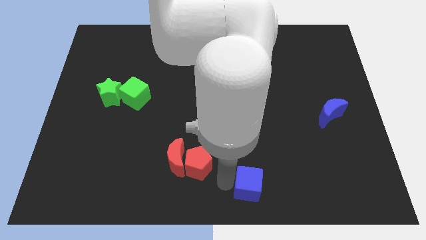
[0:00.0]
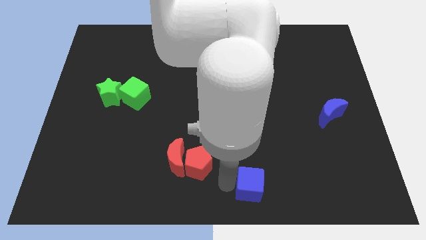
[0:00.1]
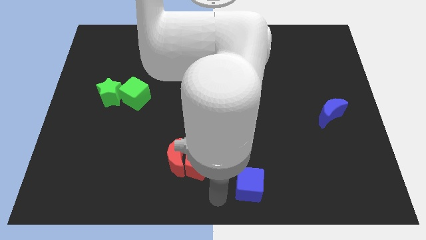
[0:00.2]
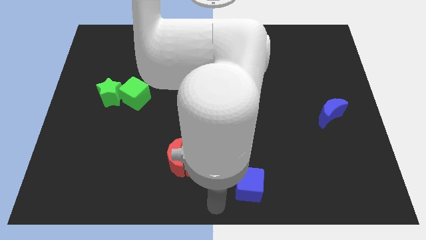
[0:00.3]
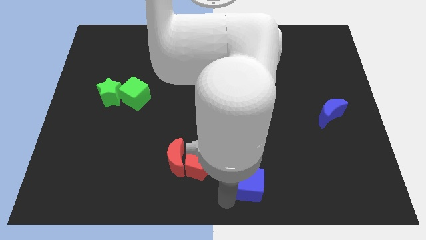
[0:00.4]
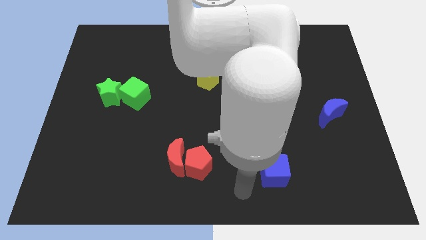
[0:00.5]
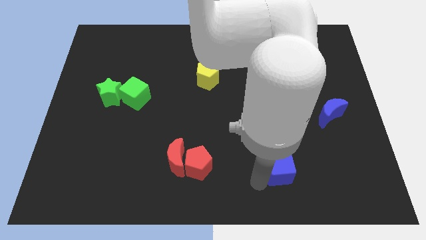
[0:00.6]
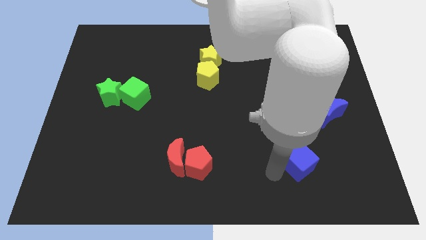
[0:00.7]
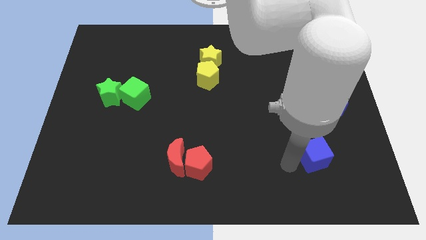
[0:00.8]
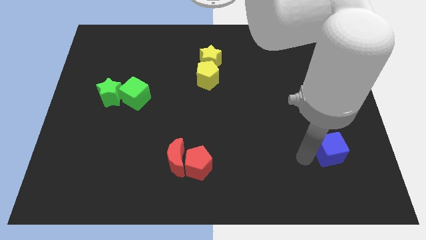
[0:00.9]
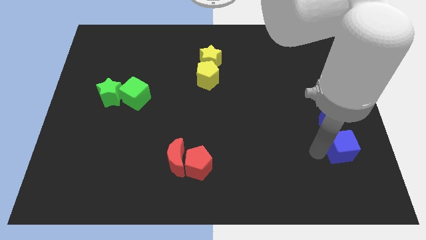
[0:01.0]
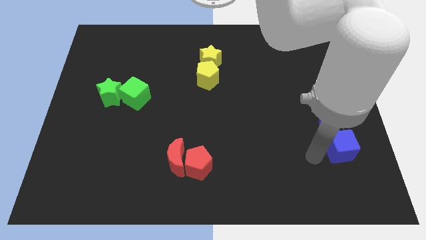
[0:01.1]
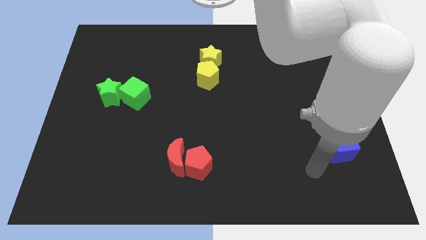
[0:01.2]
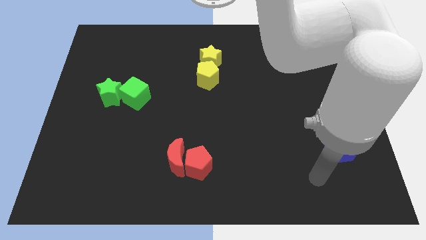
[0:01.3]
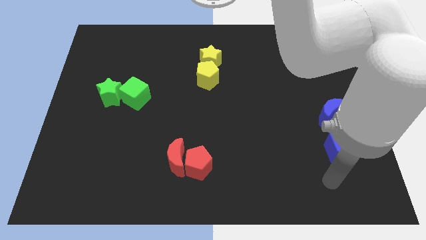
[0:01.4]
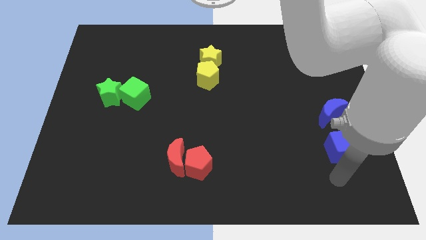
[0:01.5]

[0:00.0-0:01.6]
move the blue cube towards the blue moon

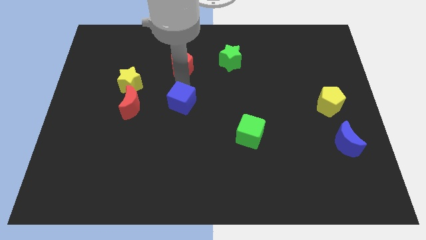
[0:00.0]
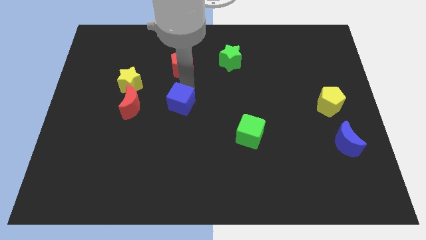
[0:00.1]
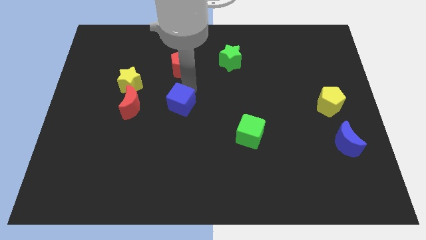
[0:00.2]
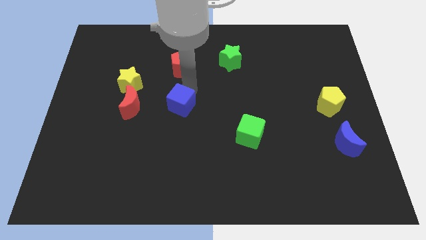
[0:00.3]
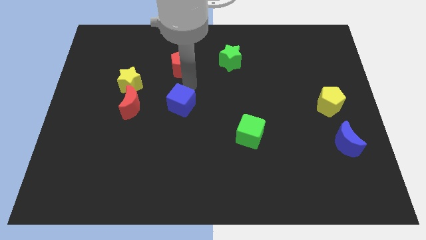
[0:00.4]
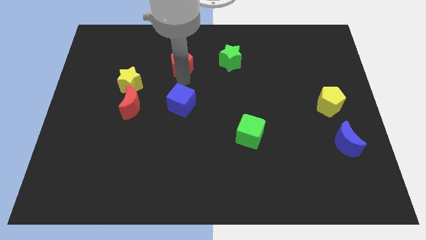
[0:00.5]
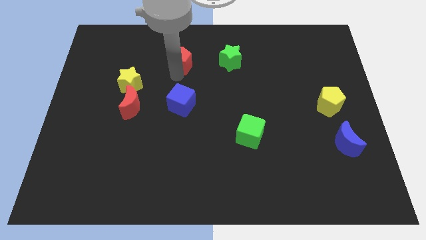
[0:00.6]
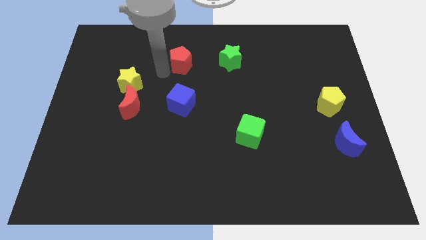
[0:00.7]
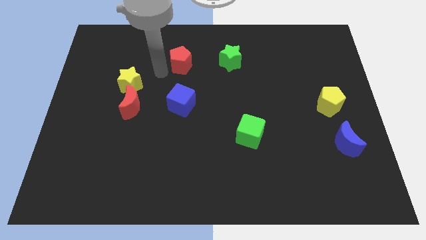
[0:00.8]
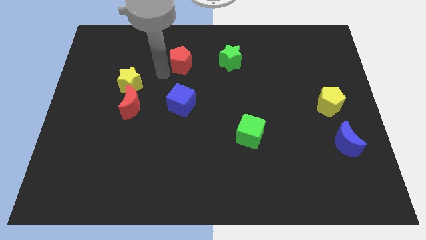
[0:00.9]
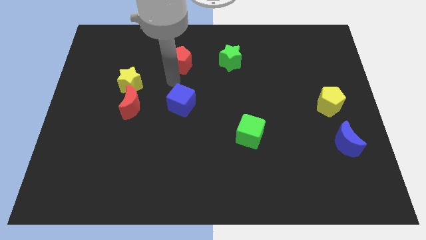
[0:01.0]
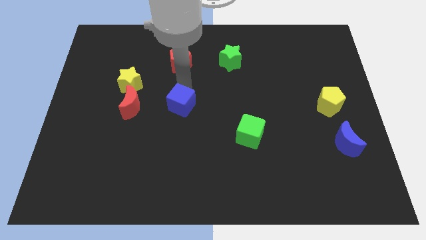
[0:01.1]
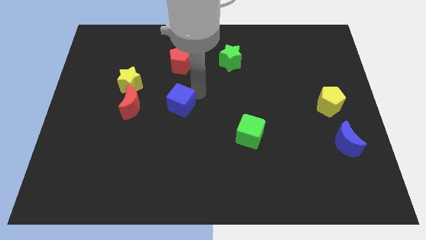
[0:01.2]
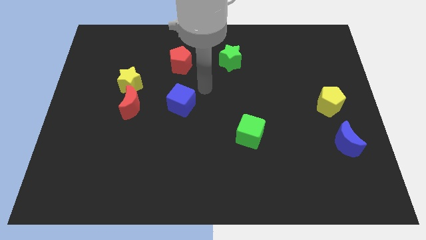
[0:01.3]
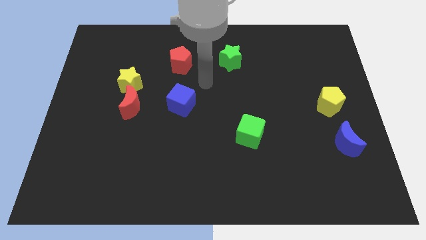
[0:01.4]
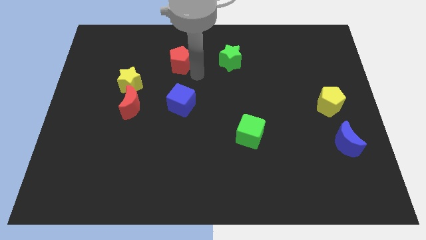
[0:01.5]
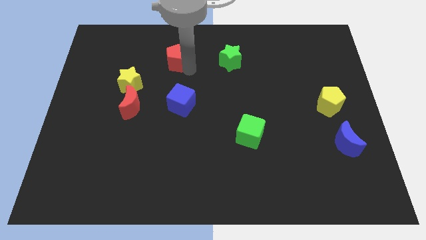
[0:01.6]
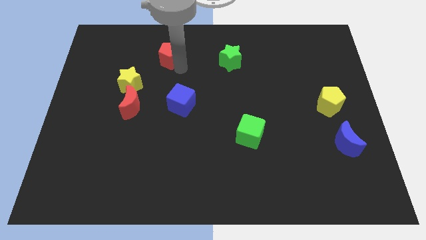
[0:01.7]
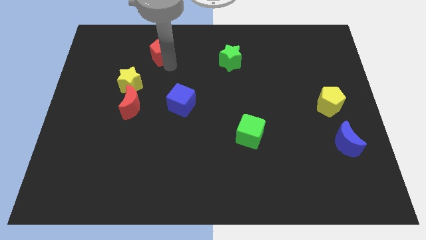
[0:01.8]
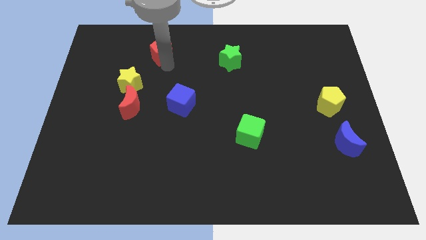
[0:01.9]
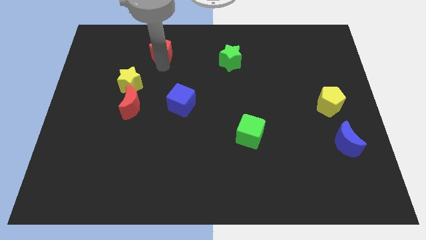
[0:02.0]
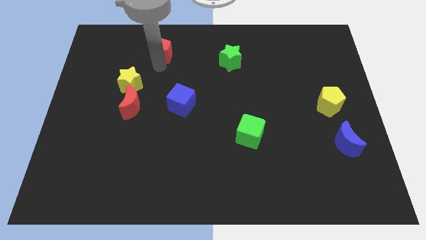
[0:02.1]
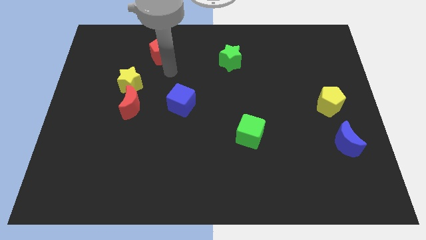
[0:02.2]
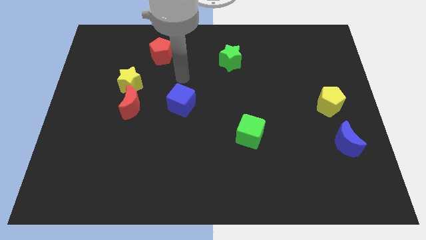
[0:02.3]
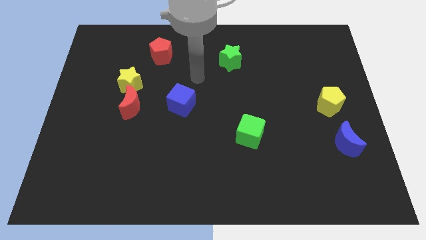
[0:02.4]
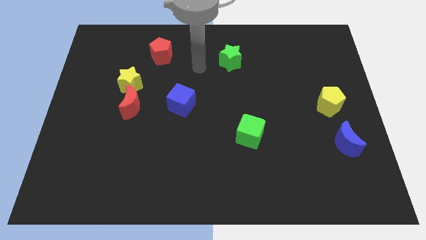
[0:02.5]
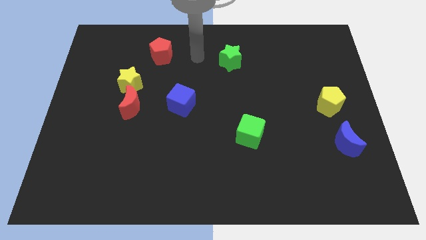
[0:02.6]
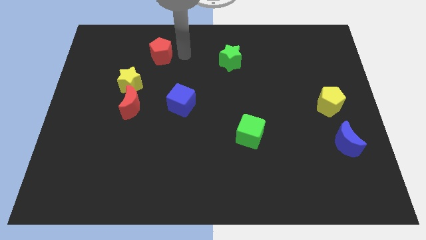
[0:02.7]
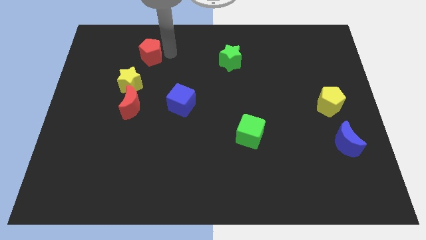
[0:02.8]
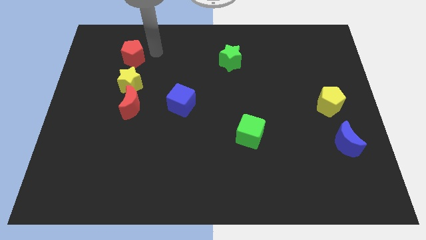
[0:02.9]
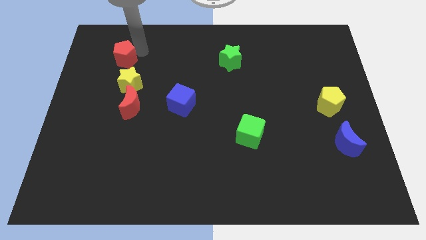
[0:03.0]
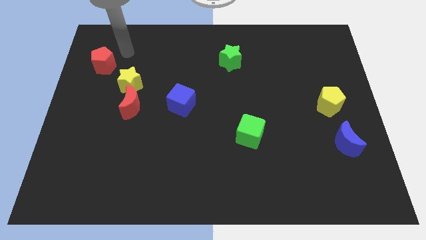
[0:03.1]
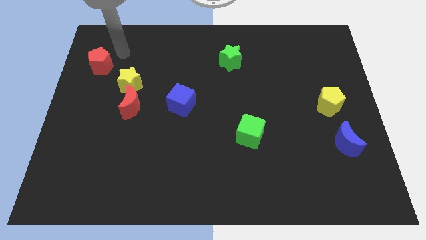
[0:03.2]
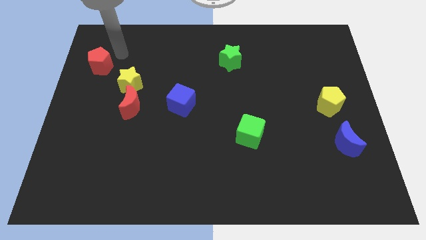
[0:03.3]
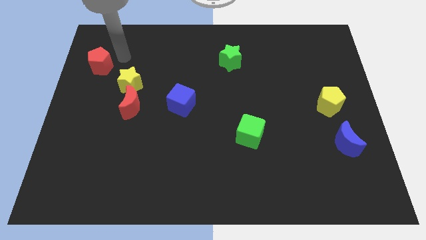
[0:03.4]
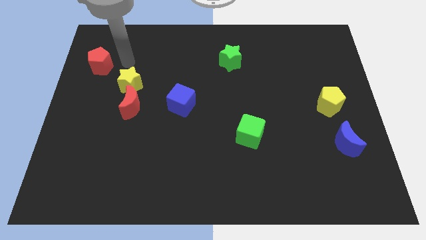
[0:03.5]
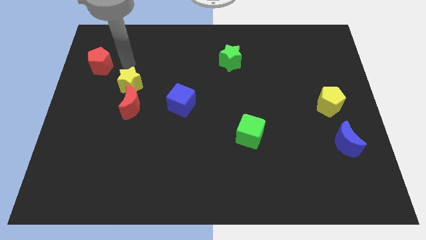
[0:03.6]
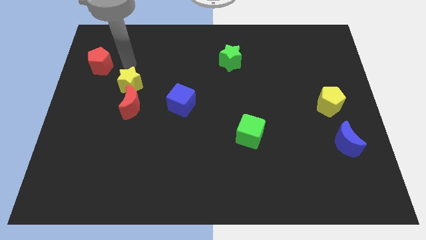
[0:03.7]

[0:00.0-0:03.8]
put the red pentagon diagonal to the red crescent

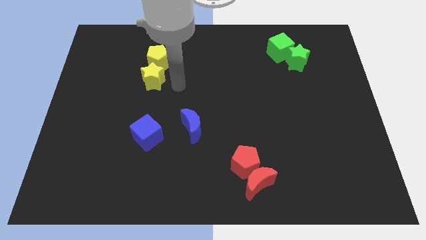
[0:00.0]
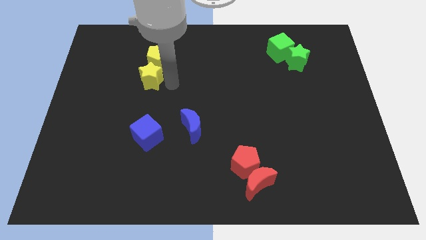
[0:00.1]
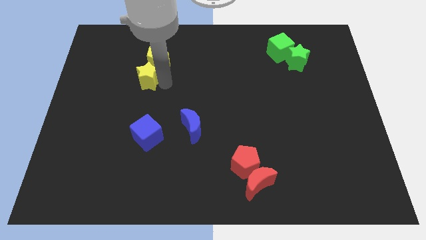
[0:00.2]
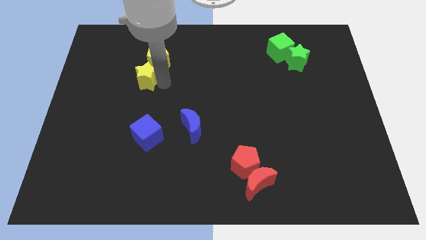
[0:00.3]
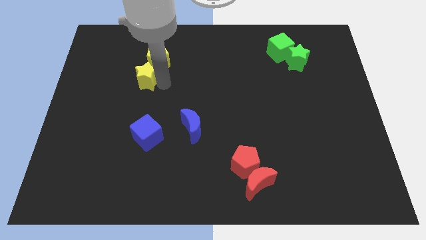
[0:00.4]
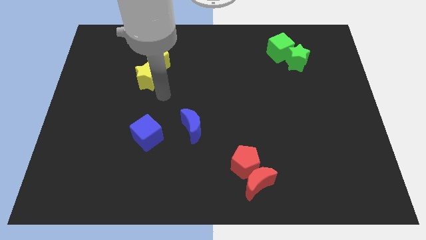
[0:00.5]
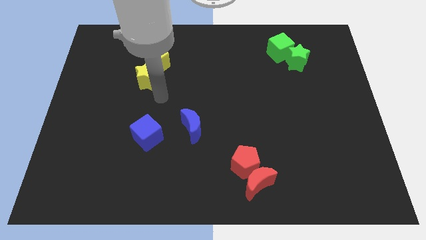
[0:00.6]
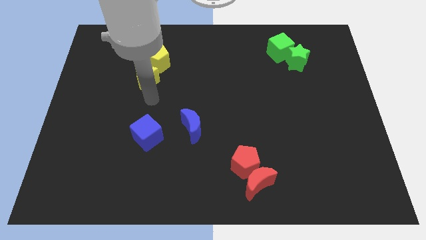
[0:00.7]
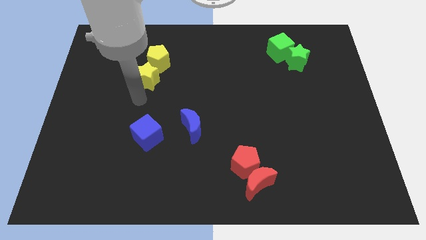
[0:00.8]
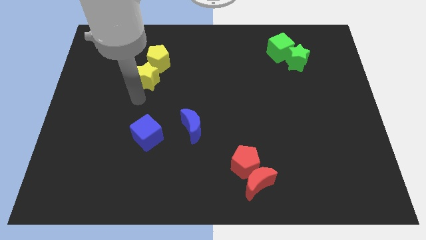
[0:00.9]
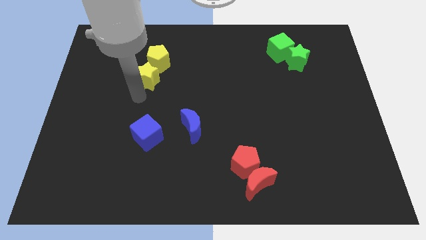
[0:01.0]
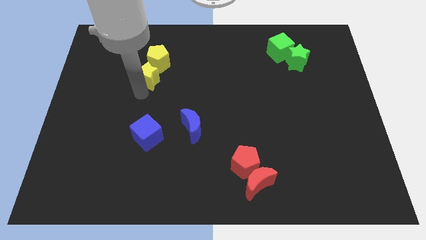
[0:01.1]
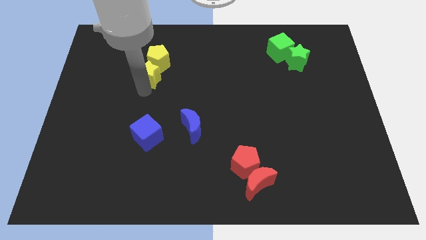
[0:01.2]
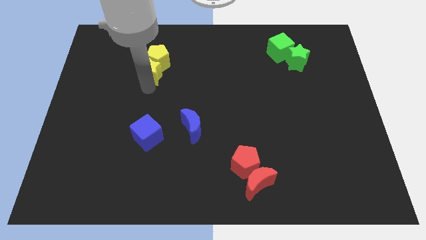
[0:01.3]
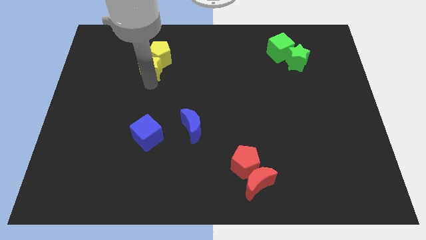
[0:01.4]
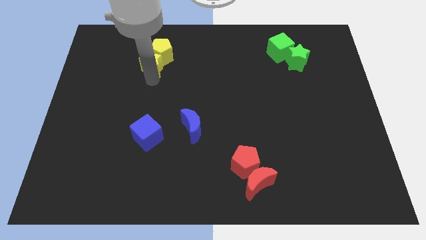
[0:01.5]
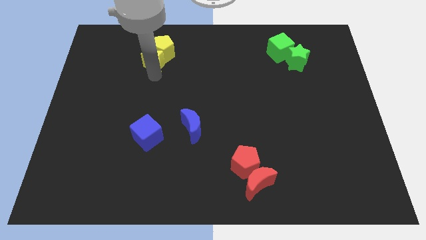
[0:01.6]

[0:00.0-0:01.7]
put the yellow star into the yellow pentagon

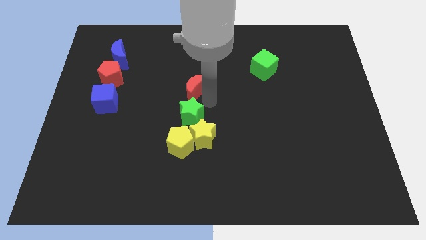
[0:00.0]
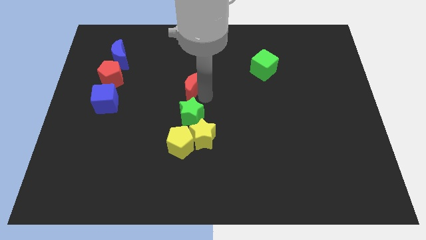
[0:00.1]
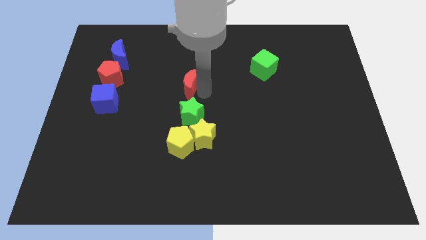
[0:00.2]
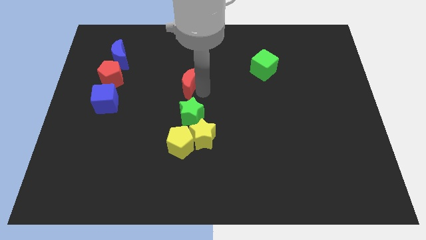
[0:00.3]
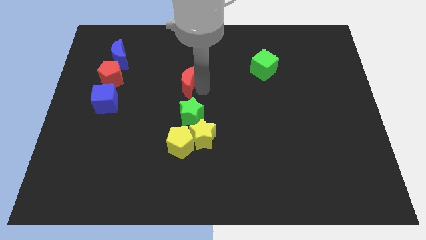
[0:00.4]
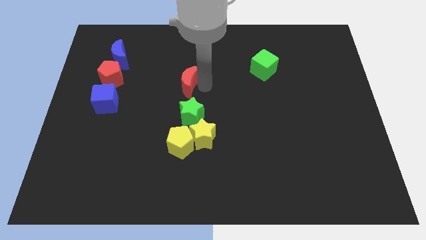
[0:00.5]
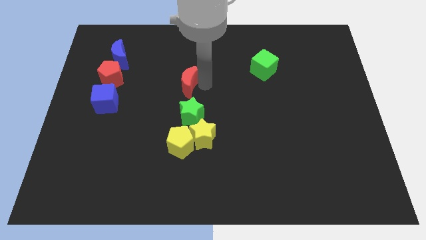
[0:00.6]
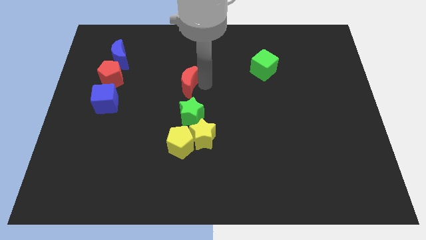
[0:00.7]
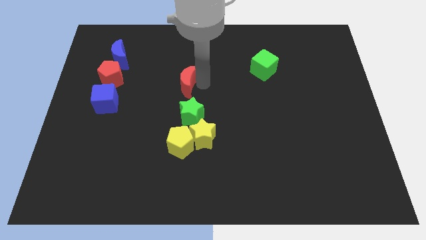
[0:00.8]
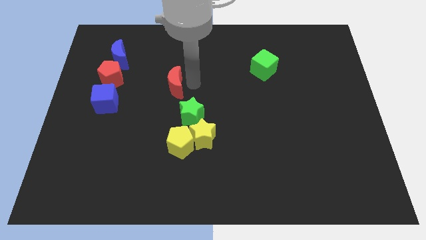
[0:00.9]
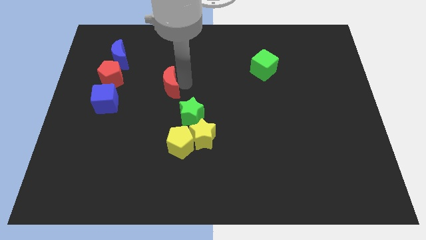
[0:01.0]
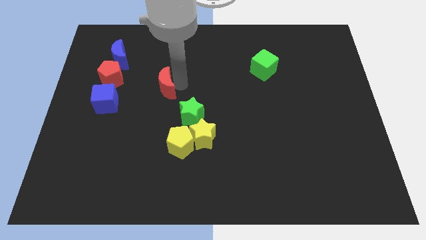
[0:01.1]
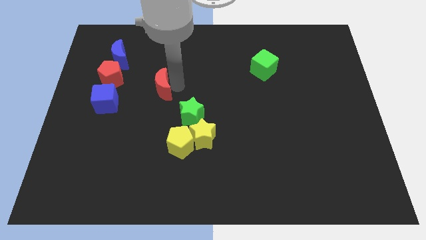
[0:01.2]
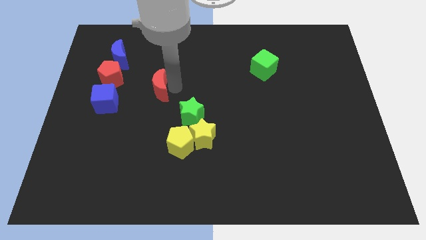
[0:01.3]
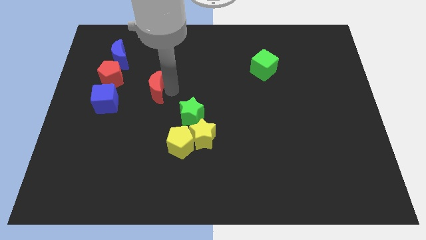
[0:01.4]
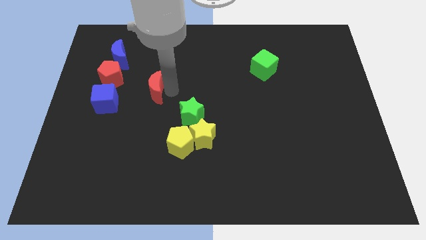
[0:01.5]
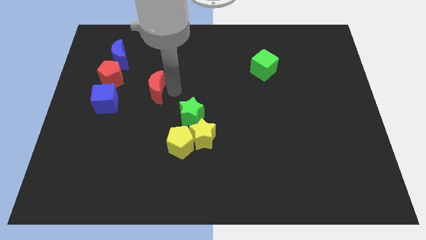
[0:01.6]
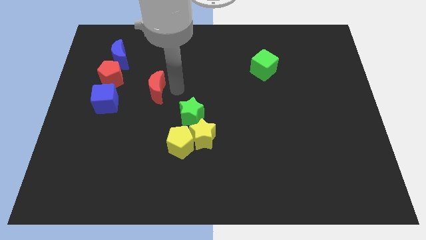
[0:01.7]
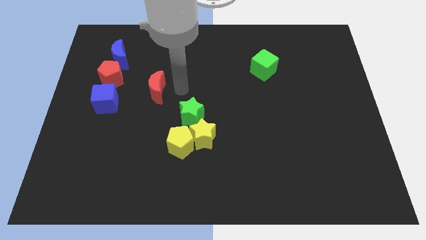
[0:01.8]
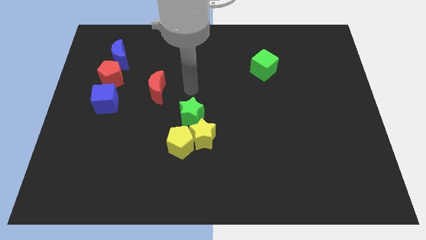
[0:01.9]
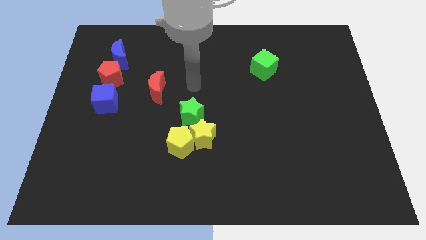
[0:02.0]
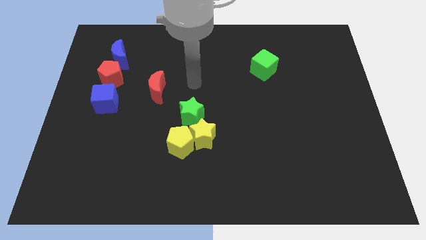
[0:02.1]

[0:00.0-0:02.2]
slide the red moon diagonally top left to the green star
